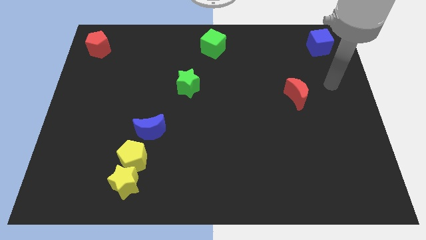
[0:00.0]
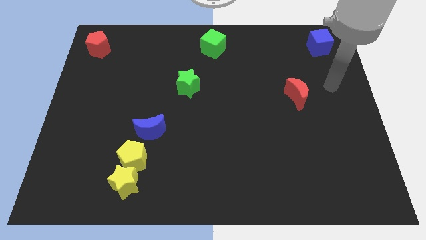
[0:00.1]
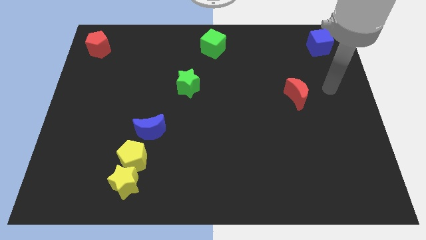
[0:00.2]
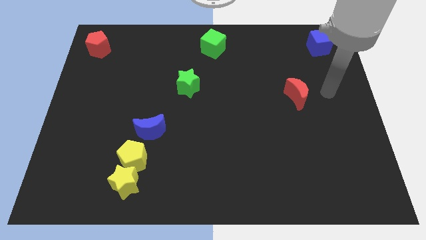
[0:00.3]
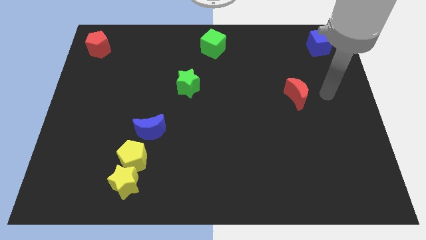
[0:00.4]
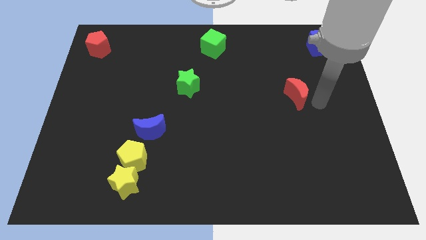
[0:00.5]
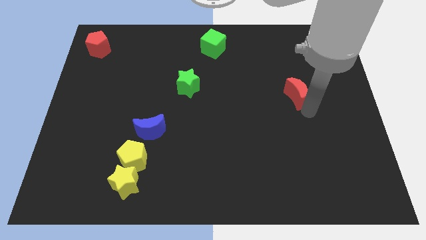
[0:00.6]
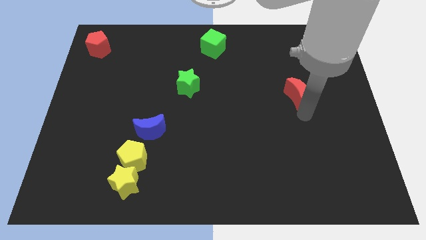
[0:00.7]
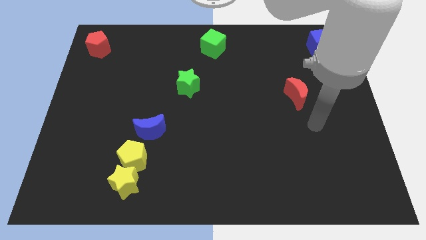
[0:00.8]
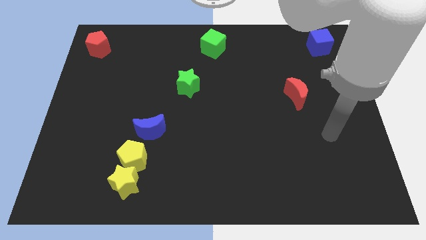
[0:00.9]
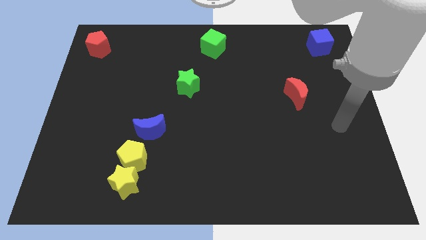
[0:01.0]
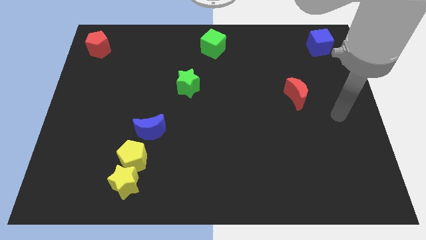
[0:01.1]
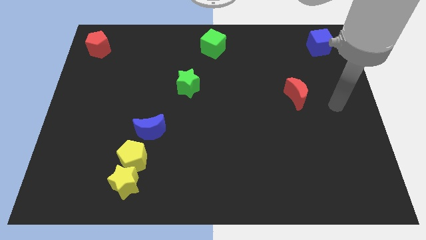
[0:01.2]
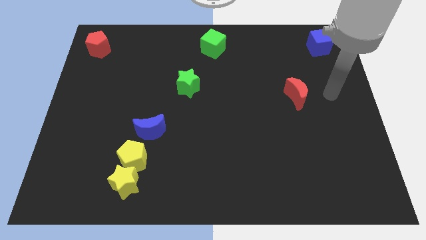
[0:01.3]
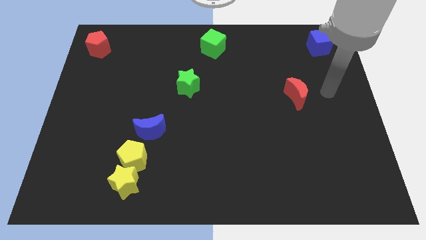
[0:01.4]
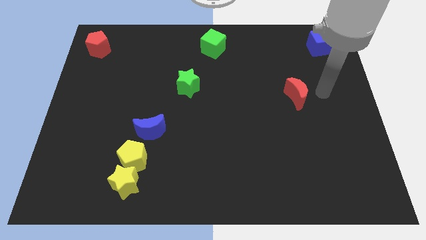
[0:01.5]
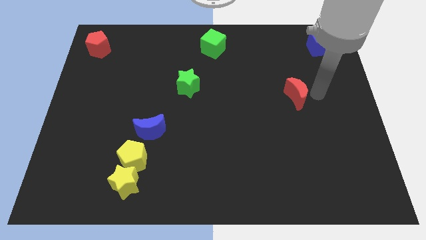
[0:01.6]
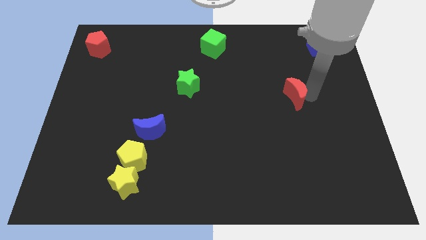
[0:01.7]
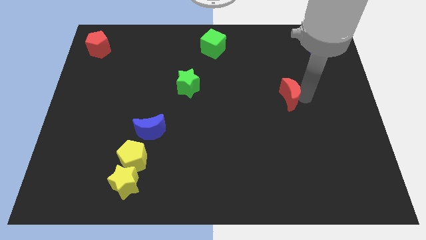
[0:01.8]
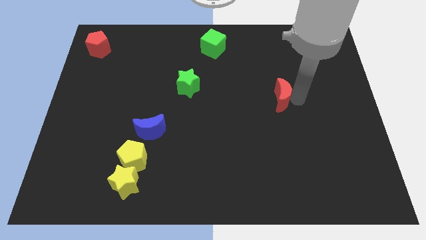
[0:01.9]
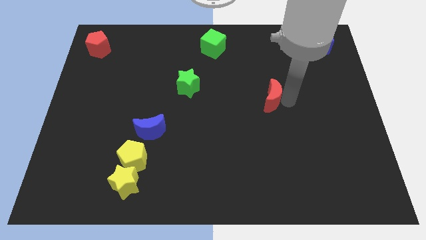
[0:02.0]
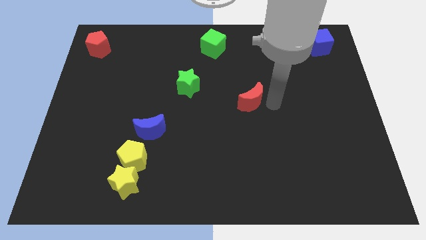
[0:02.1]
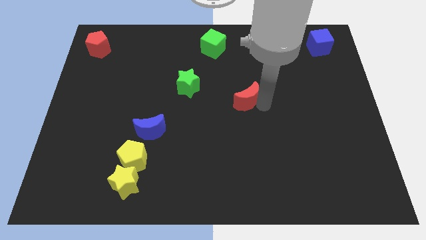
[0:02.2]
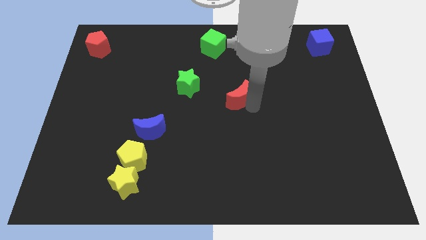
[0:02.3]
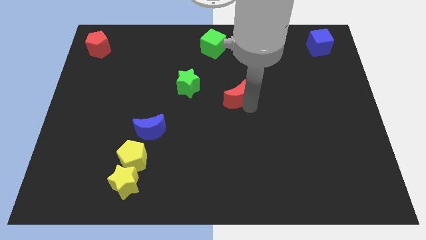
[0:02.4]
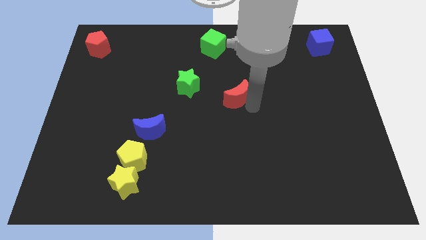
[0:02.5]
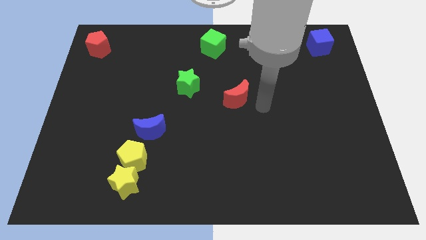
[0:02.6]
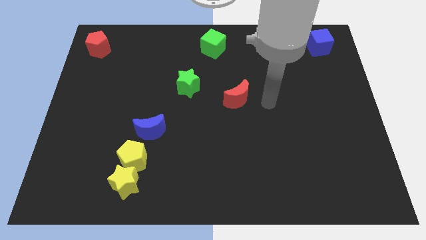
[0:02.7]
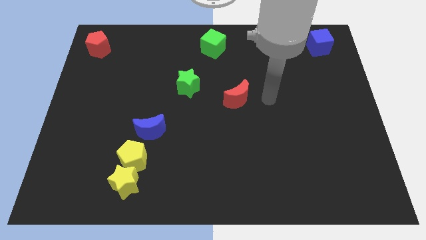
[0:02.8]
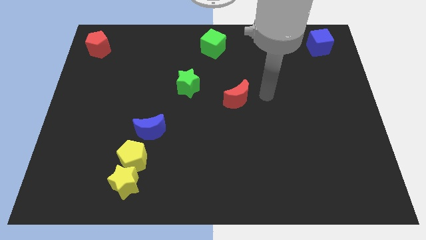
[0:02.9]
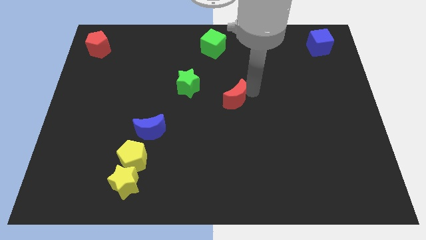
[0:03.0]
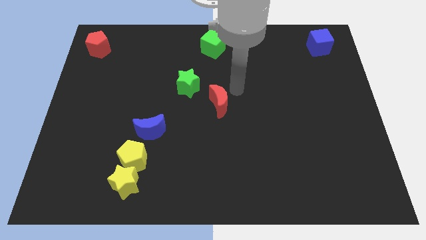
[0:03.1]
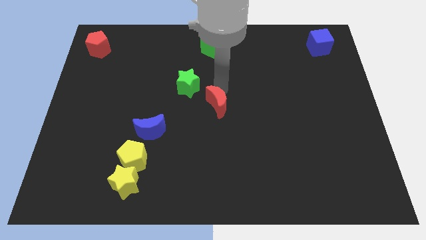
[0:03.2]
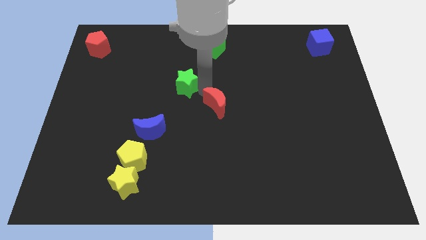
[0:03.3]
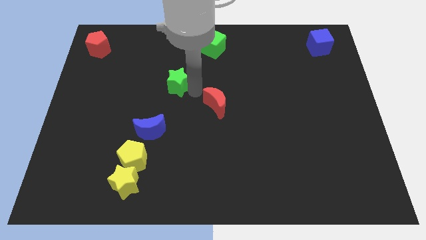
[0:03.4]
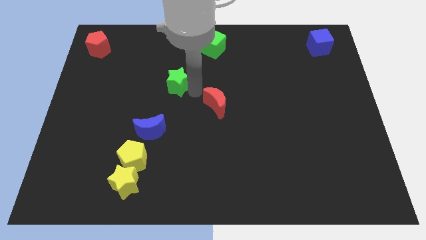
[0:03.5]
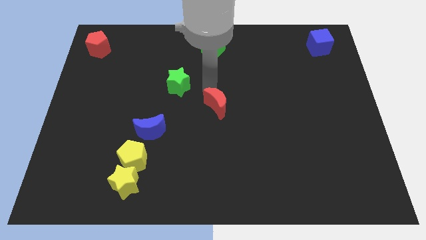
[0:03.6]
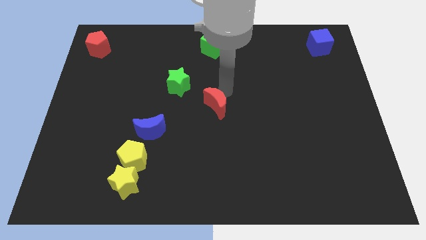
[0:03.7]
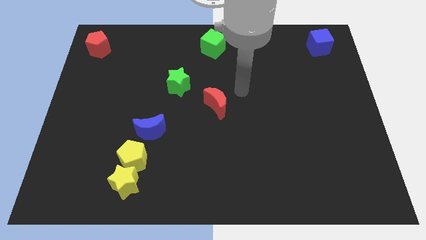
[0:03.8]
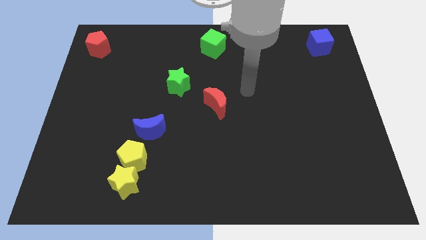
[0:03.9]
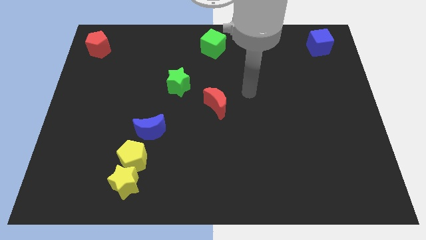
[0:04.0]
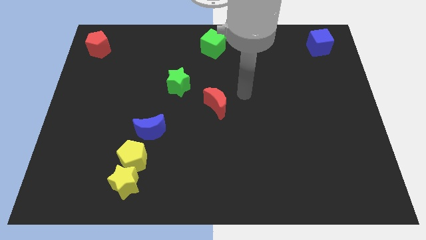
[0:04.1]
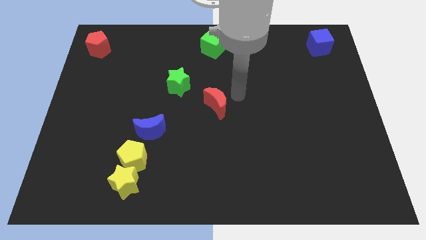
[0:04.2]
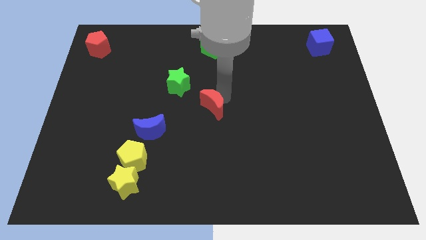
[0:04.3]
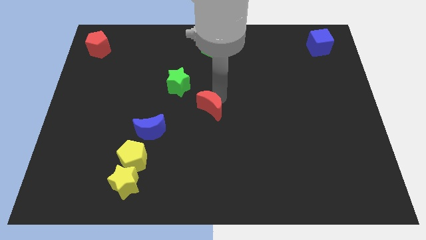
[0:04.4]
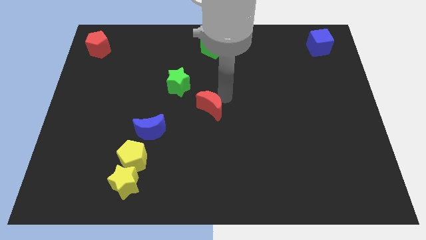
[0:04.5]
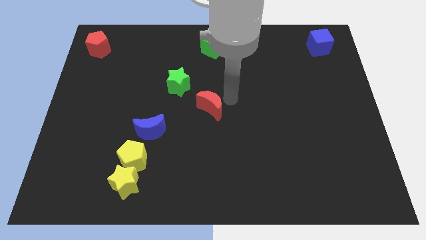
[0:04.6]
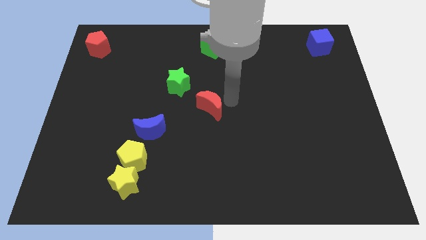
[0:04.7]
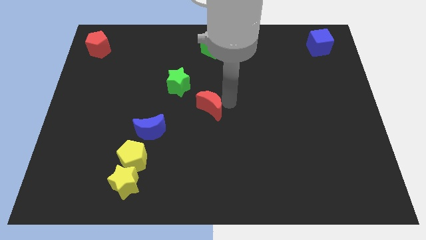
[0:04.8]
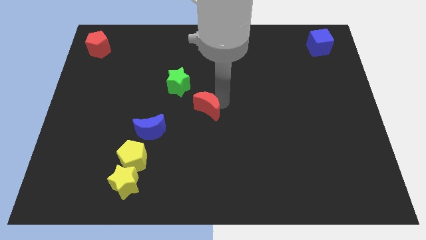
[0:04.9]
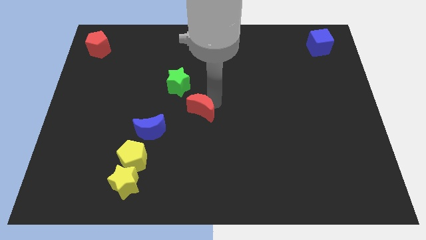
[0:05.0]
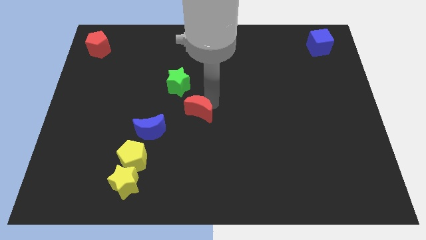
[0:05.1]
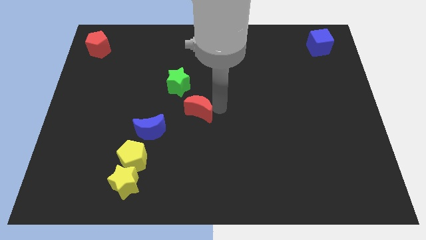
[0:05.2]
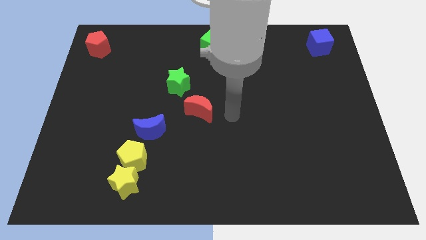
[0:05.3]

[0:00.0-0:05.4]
move the red crescent diagonally bottom right to the green star

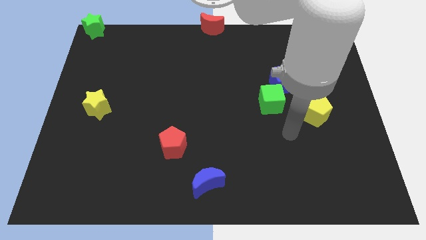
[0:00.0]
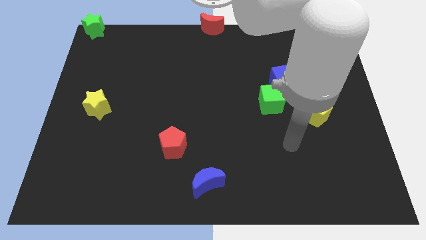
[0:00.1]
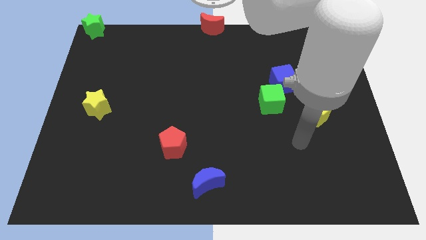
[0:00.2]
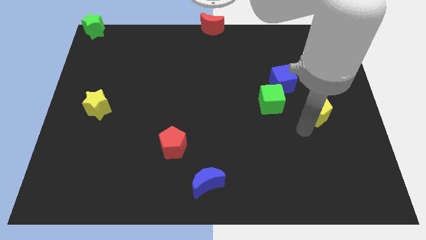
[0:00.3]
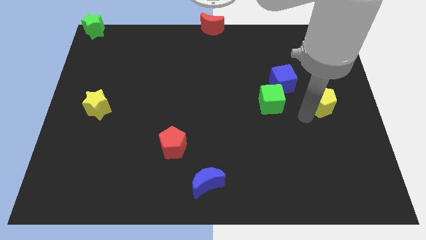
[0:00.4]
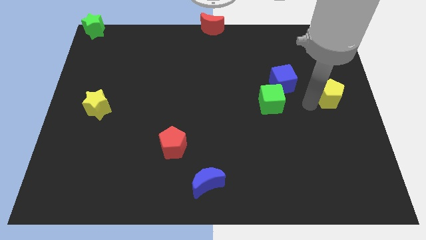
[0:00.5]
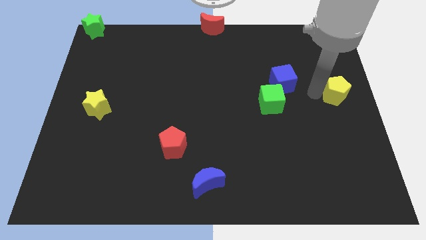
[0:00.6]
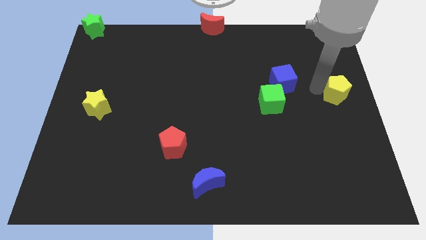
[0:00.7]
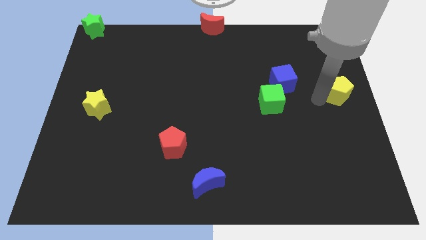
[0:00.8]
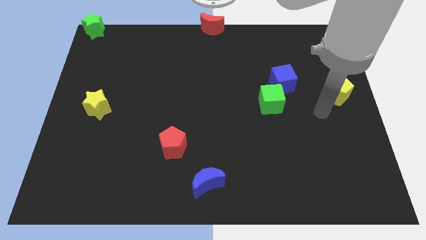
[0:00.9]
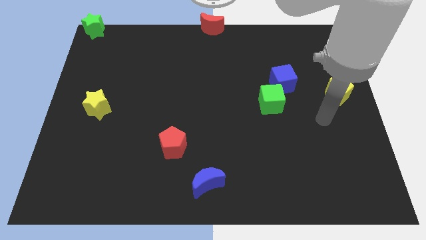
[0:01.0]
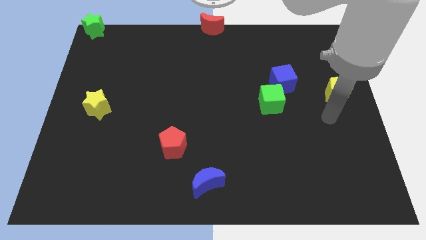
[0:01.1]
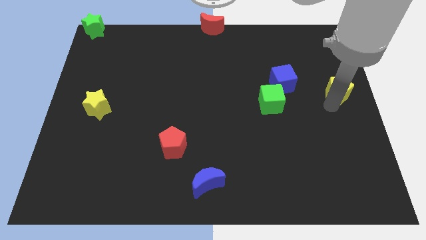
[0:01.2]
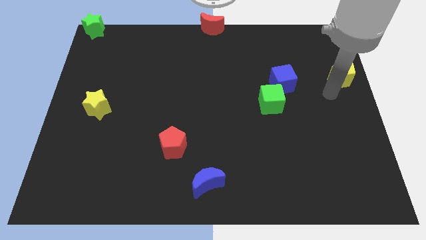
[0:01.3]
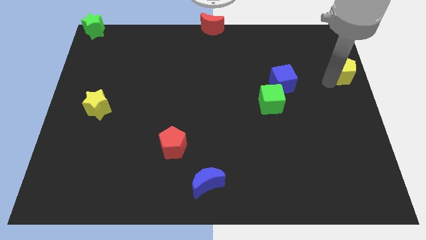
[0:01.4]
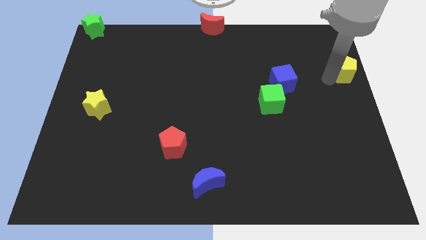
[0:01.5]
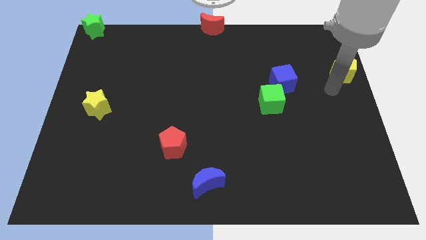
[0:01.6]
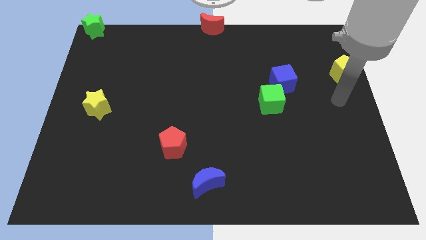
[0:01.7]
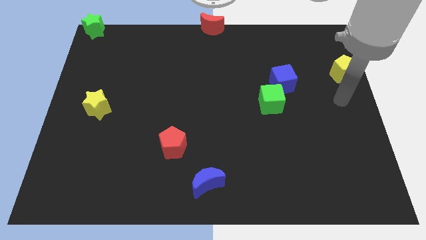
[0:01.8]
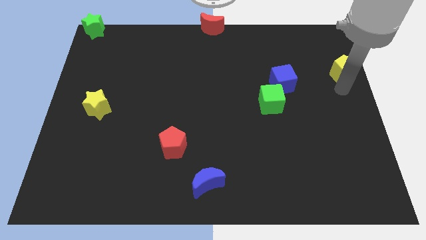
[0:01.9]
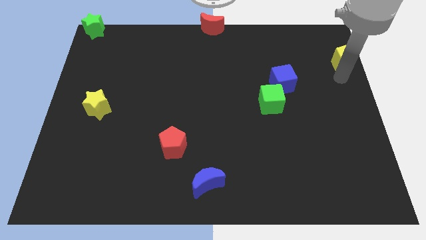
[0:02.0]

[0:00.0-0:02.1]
drag the yellow pentagon towards top right

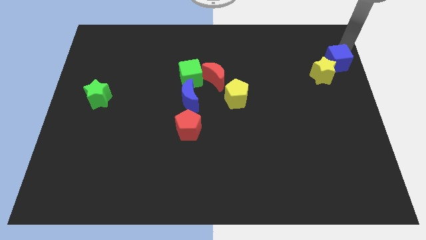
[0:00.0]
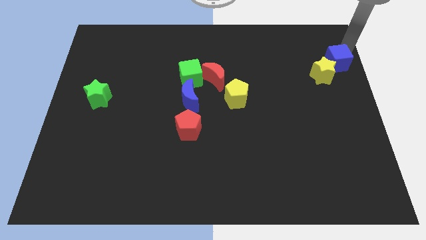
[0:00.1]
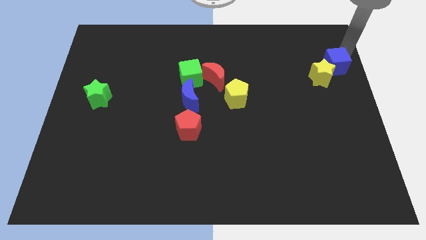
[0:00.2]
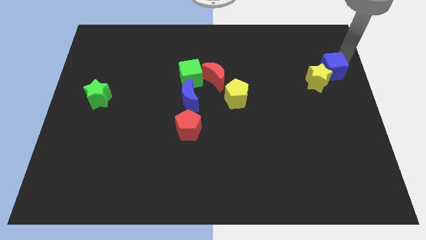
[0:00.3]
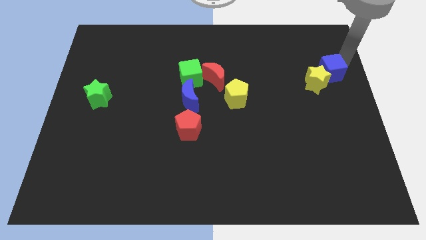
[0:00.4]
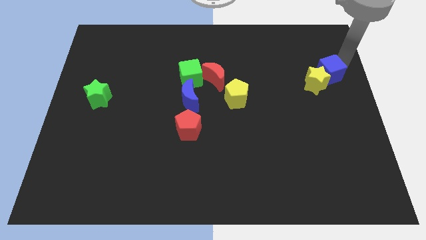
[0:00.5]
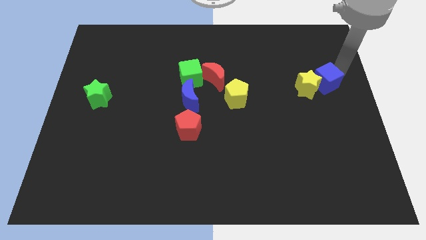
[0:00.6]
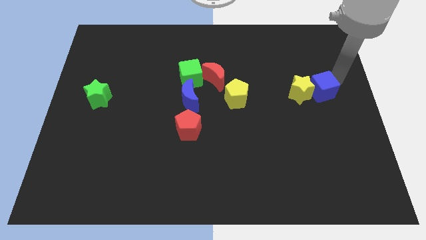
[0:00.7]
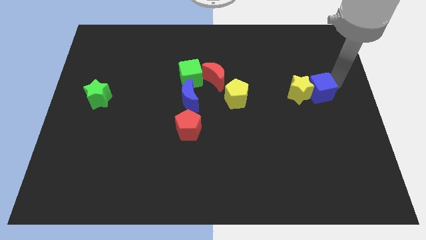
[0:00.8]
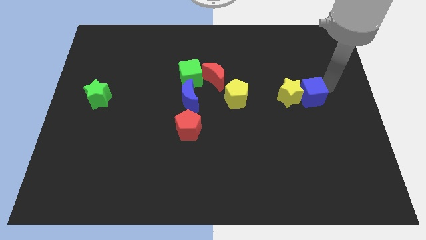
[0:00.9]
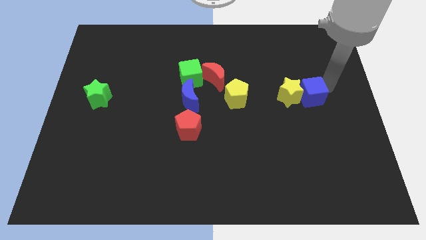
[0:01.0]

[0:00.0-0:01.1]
push blue cube and yellow star towards the left side of the yellow pentagon

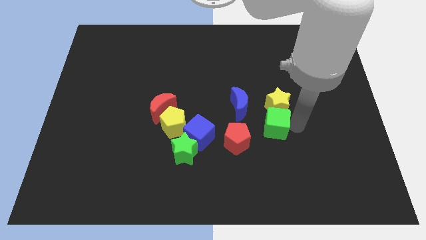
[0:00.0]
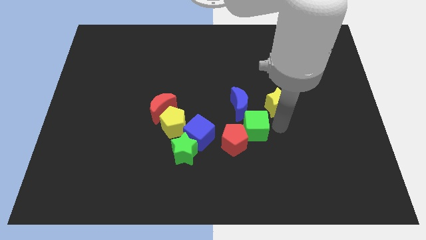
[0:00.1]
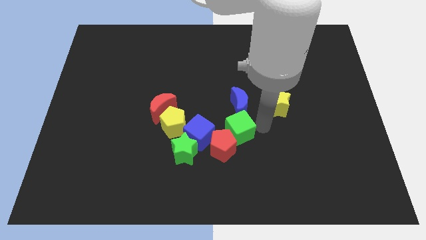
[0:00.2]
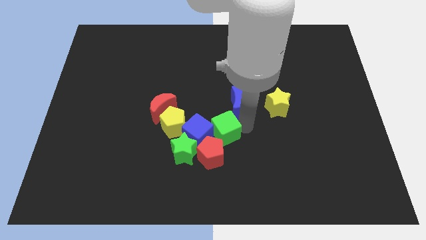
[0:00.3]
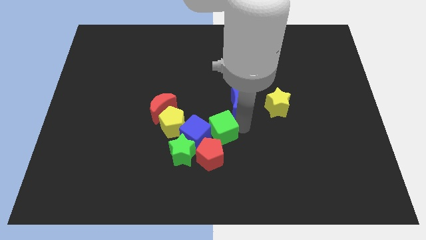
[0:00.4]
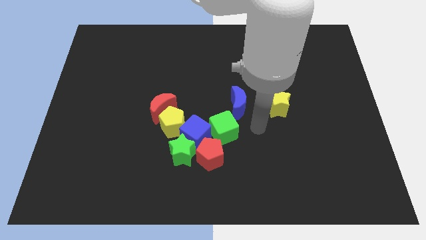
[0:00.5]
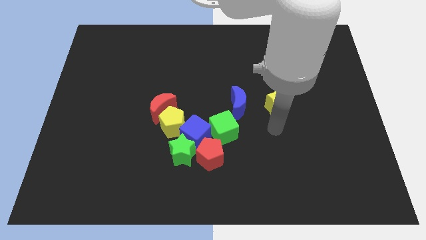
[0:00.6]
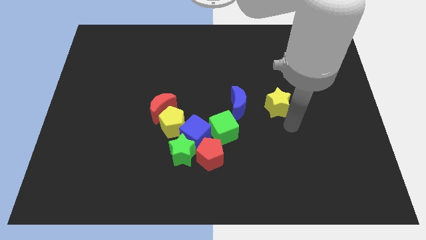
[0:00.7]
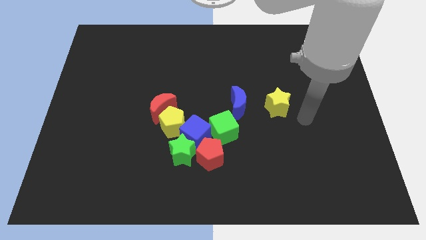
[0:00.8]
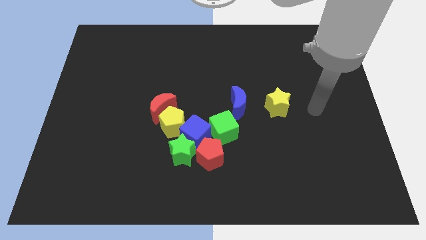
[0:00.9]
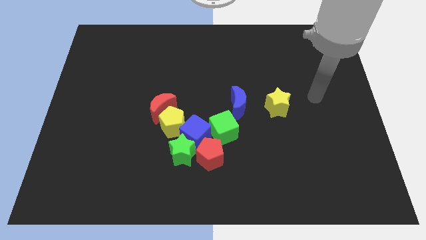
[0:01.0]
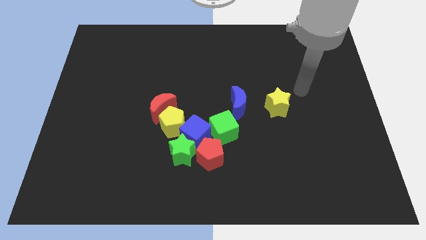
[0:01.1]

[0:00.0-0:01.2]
push the green cube into the group of blocks
